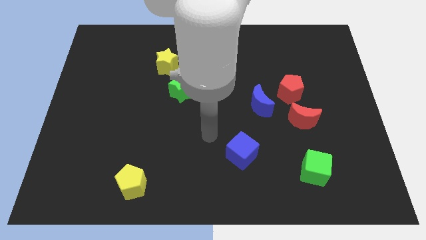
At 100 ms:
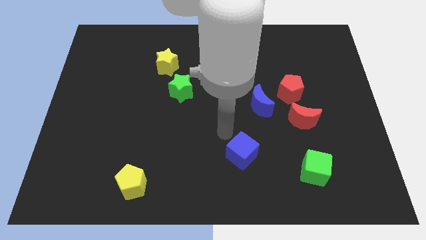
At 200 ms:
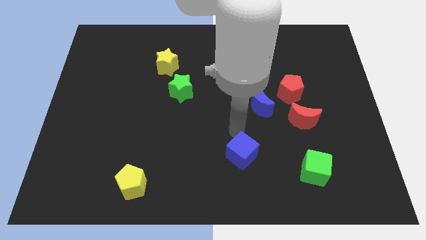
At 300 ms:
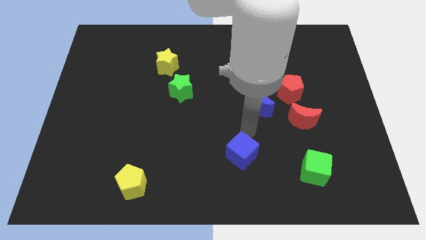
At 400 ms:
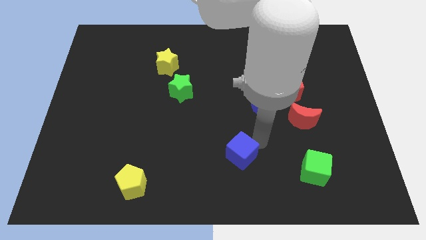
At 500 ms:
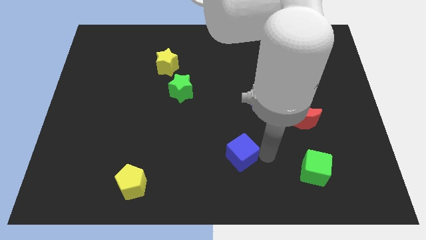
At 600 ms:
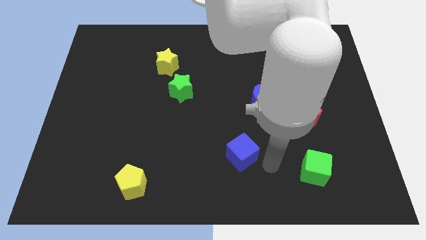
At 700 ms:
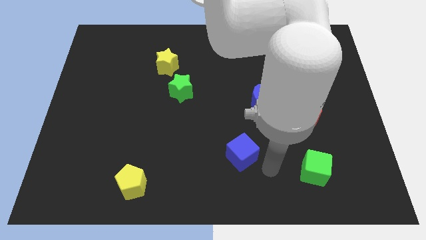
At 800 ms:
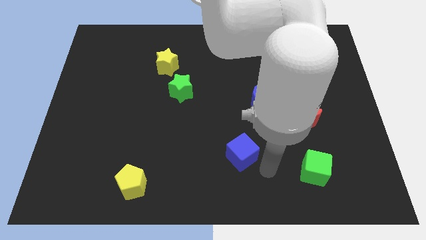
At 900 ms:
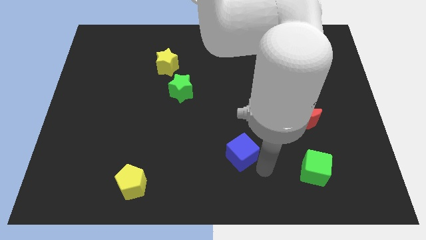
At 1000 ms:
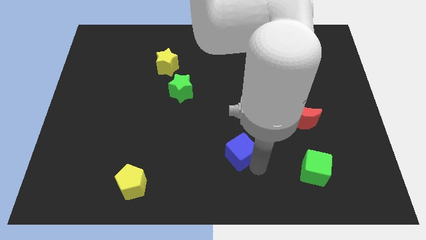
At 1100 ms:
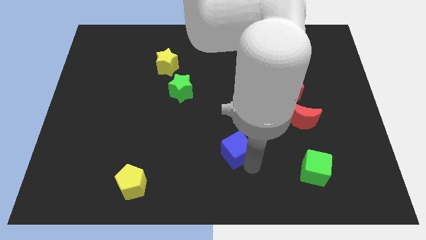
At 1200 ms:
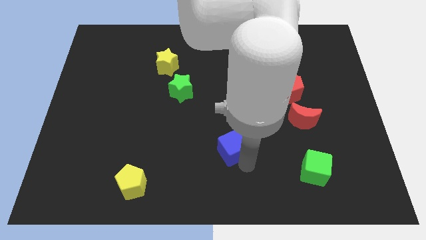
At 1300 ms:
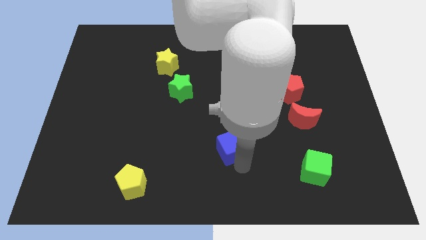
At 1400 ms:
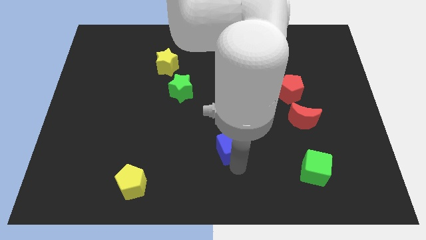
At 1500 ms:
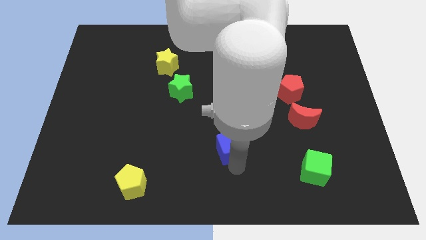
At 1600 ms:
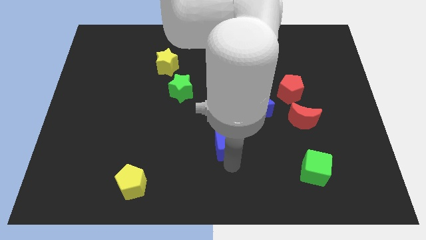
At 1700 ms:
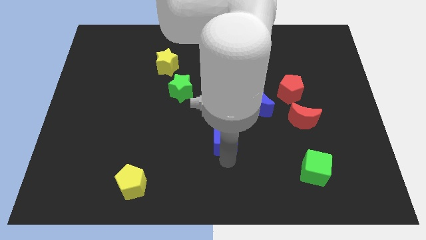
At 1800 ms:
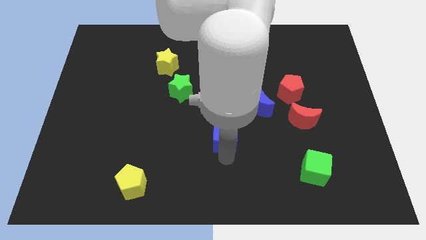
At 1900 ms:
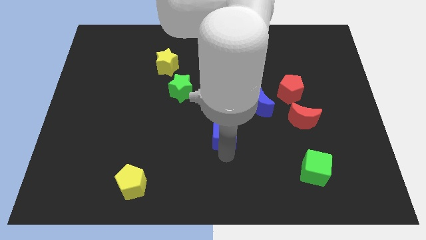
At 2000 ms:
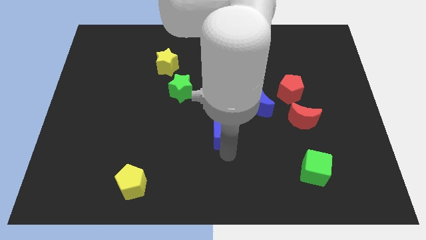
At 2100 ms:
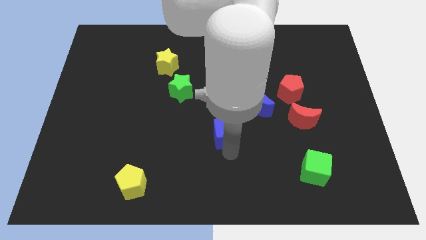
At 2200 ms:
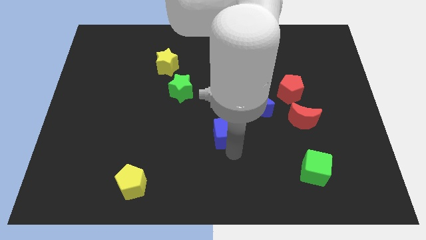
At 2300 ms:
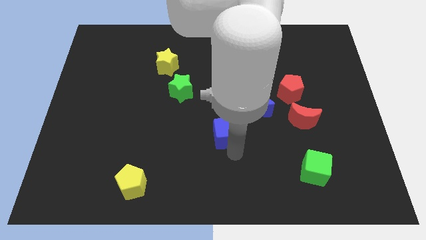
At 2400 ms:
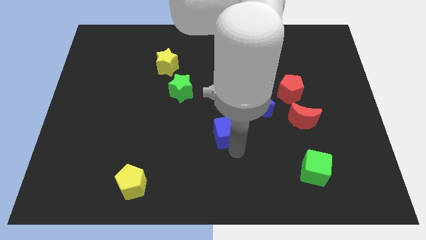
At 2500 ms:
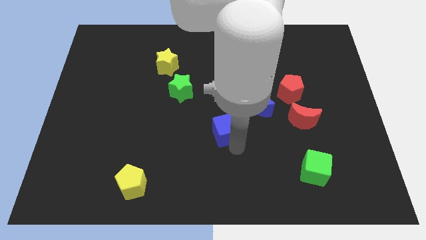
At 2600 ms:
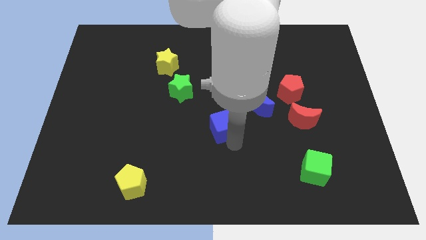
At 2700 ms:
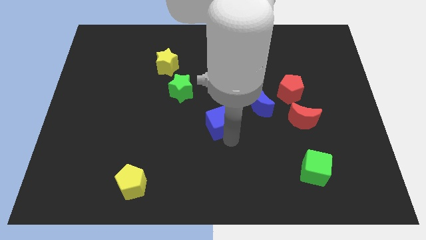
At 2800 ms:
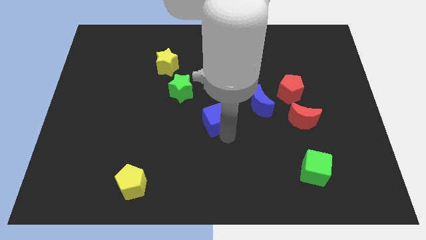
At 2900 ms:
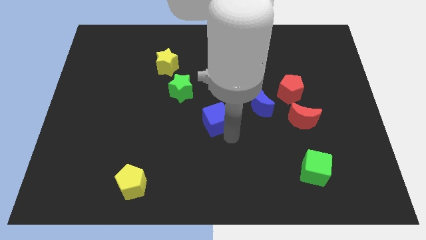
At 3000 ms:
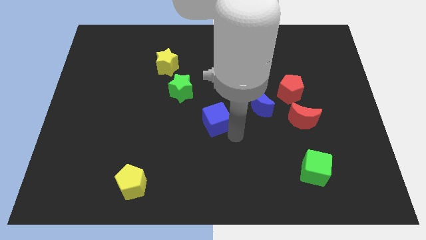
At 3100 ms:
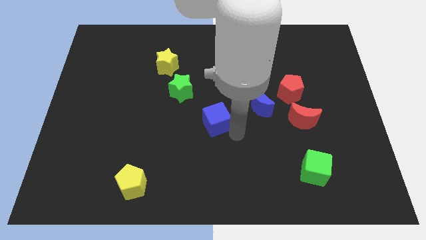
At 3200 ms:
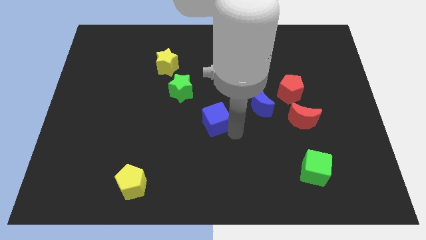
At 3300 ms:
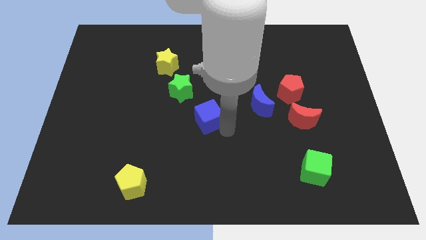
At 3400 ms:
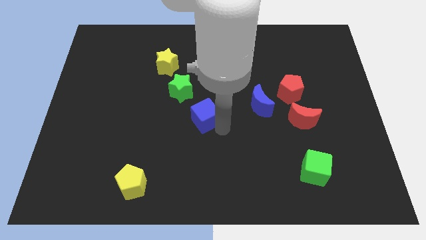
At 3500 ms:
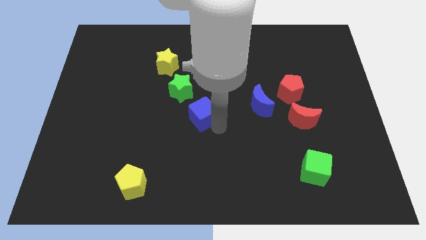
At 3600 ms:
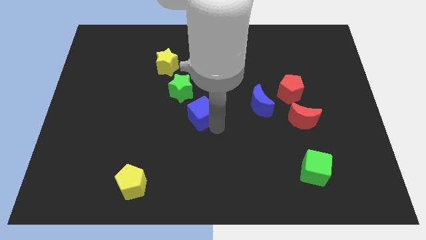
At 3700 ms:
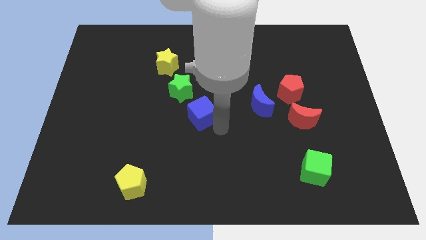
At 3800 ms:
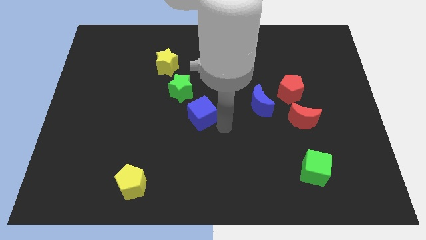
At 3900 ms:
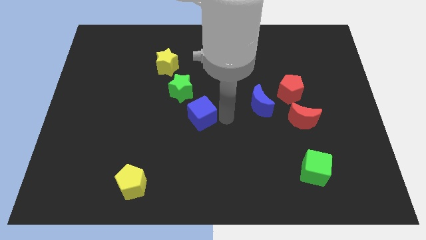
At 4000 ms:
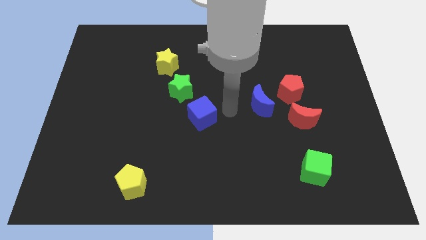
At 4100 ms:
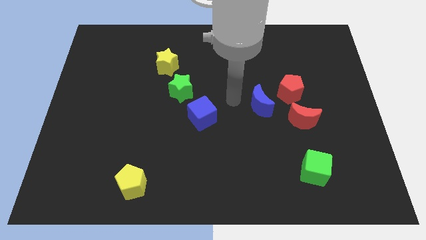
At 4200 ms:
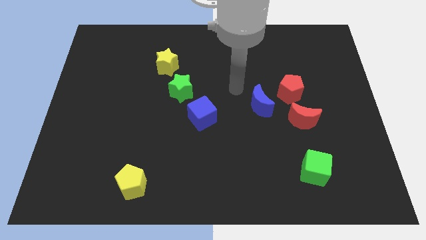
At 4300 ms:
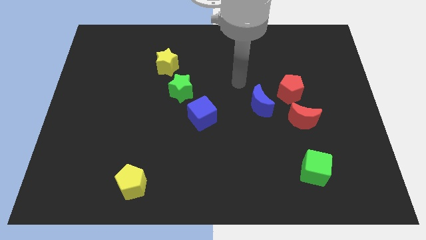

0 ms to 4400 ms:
place the blue cube parallel left to blue moon

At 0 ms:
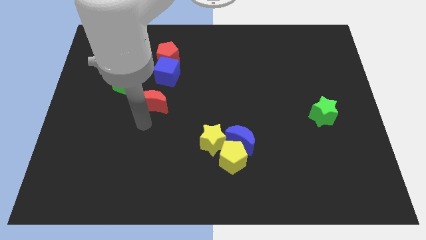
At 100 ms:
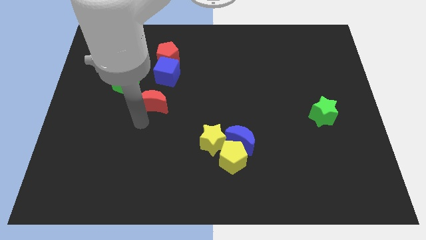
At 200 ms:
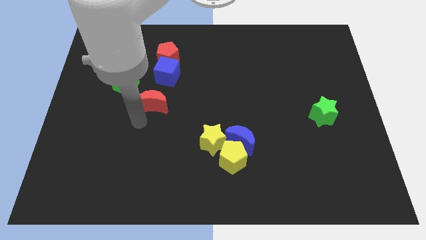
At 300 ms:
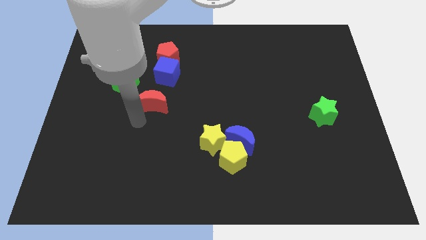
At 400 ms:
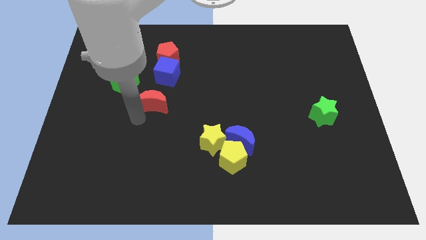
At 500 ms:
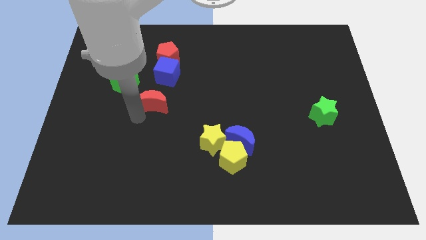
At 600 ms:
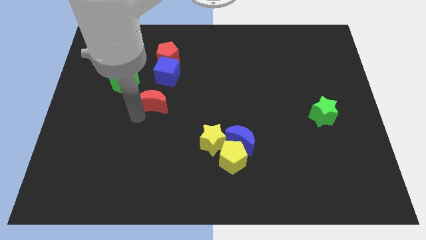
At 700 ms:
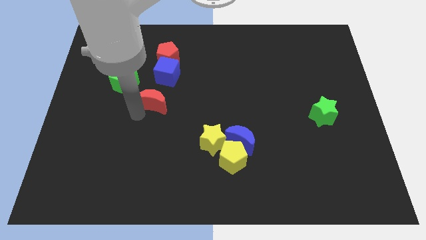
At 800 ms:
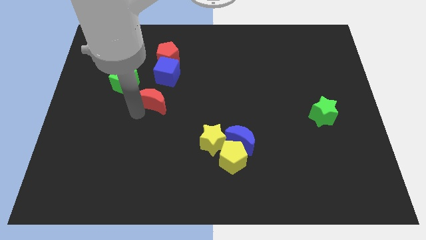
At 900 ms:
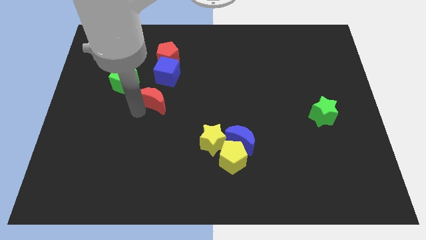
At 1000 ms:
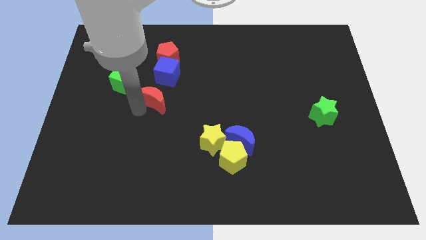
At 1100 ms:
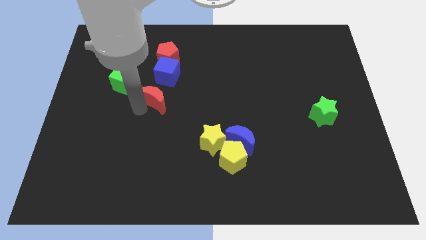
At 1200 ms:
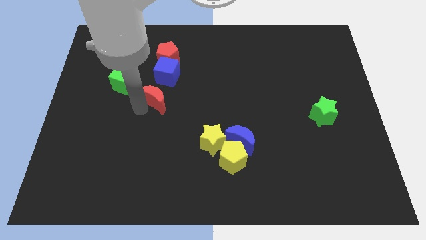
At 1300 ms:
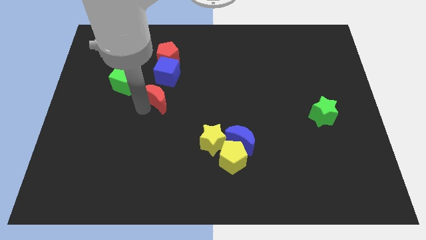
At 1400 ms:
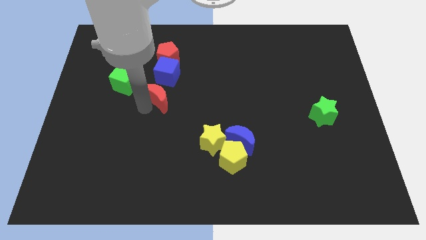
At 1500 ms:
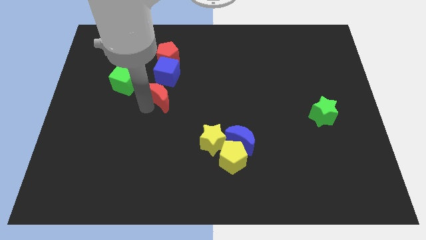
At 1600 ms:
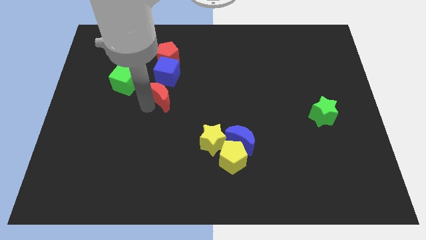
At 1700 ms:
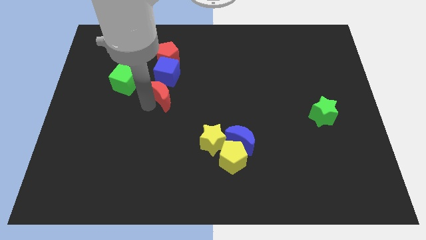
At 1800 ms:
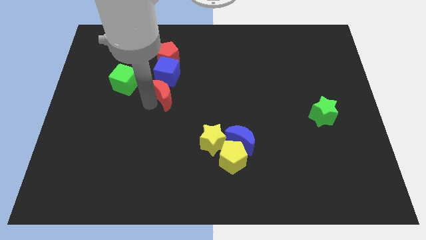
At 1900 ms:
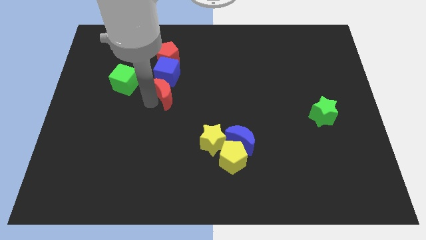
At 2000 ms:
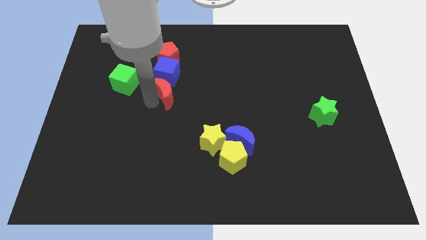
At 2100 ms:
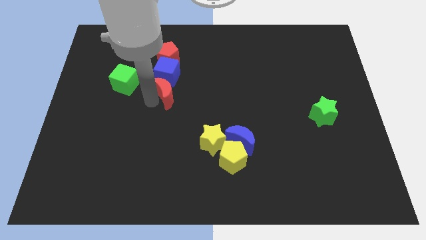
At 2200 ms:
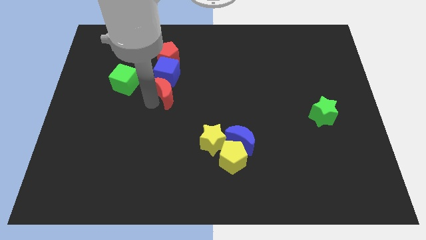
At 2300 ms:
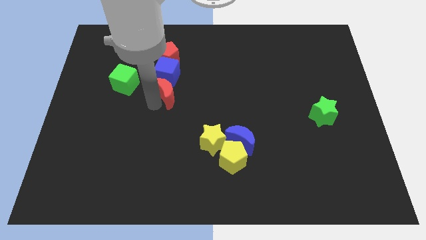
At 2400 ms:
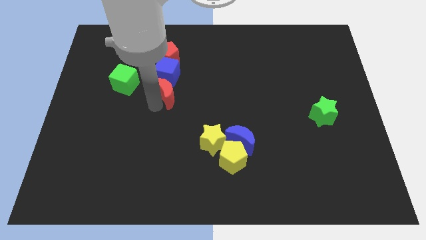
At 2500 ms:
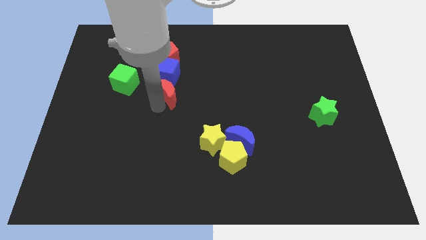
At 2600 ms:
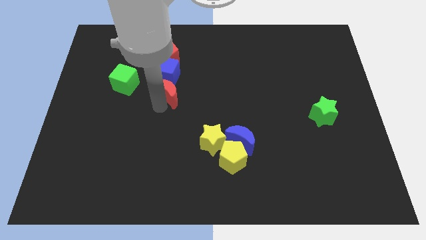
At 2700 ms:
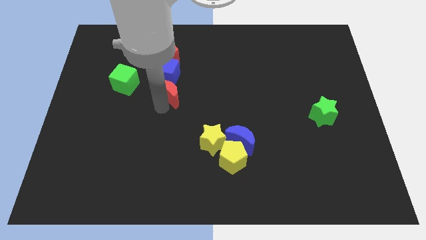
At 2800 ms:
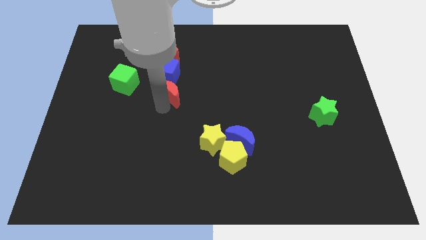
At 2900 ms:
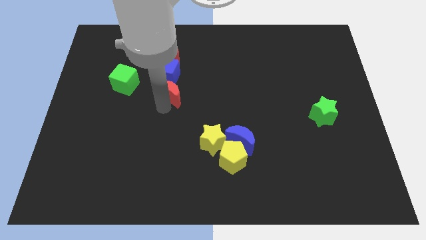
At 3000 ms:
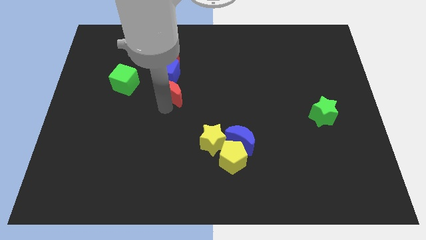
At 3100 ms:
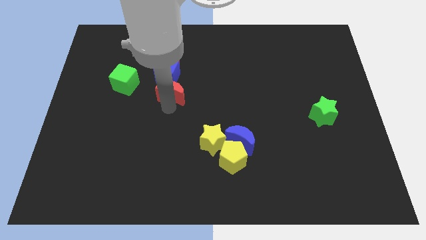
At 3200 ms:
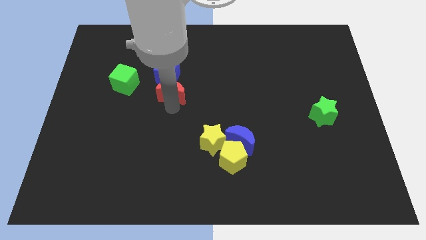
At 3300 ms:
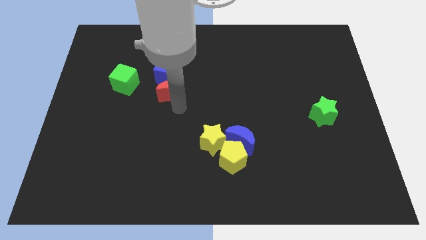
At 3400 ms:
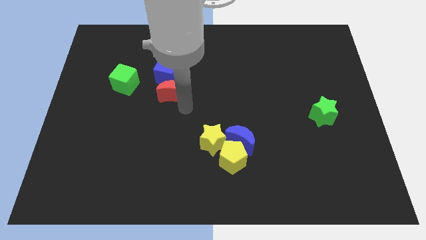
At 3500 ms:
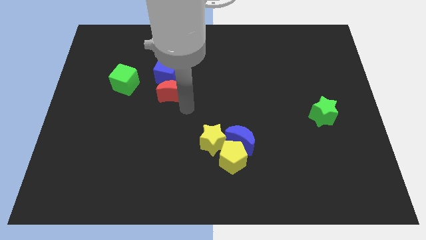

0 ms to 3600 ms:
move the red moon into the bottom side of the blue cube

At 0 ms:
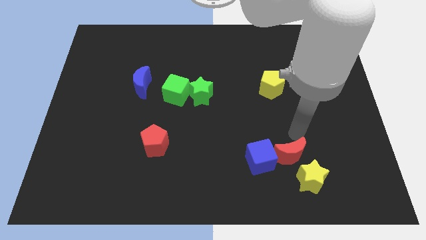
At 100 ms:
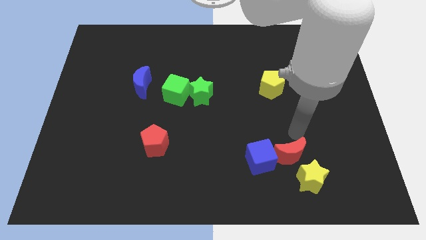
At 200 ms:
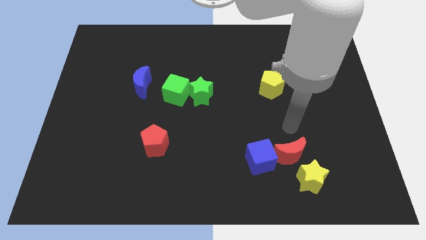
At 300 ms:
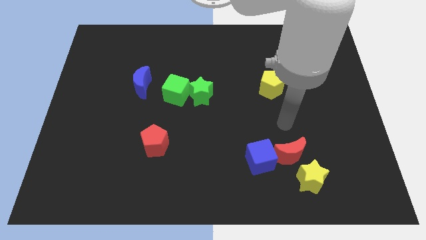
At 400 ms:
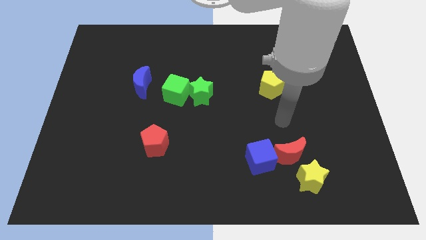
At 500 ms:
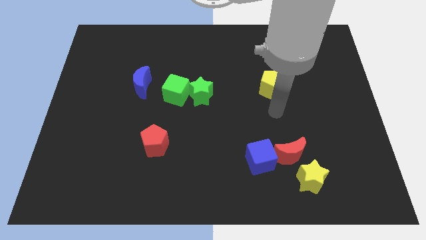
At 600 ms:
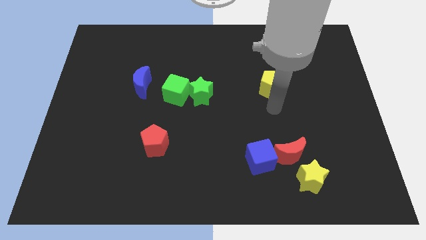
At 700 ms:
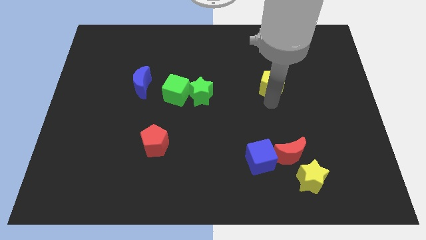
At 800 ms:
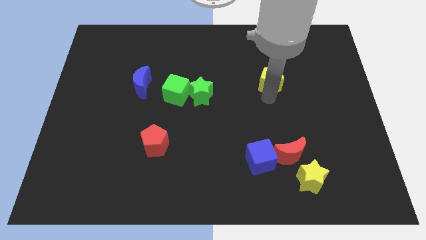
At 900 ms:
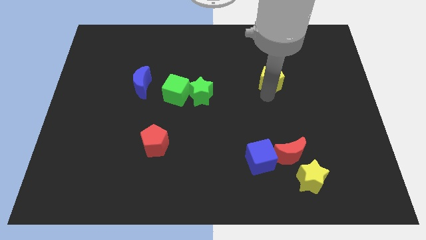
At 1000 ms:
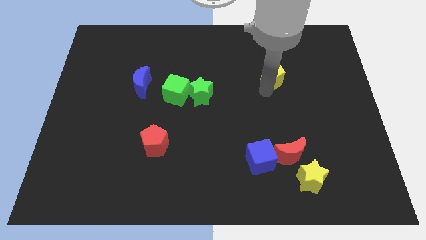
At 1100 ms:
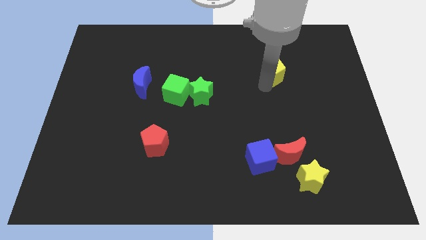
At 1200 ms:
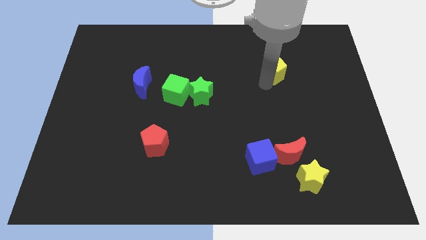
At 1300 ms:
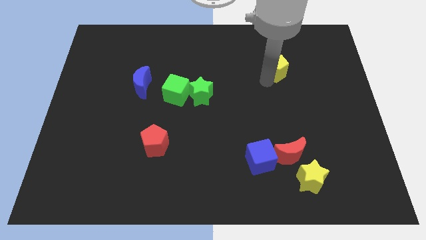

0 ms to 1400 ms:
move yellow pentagon towards its top
